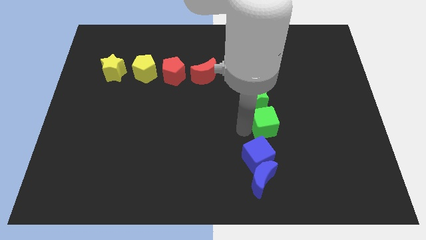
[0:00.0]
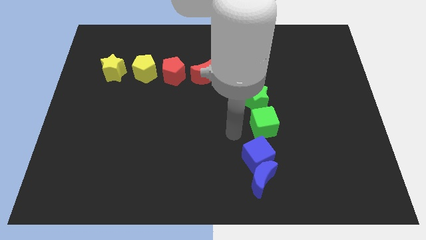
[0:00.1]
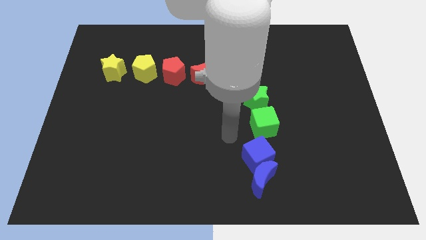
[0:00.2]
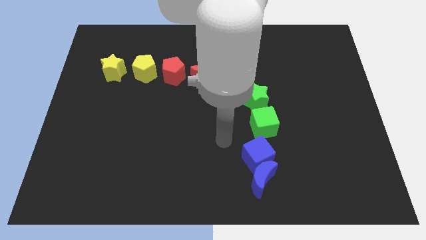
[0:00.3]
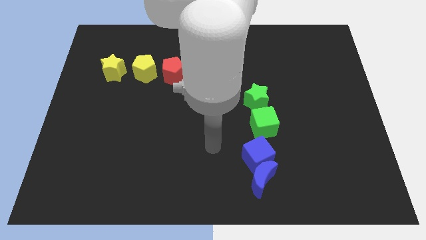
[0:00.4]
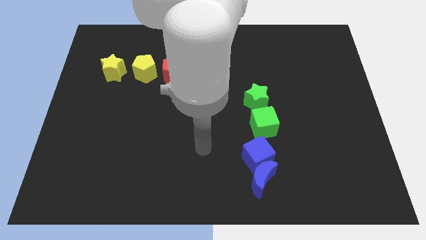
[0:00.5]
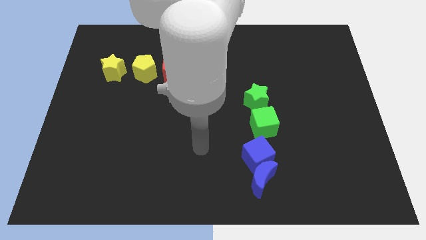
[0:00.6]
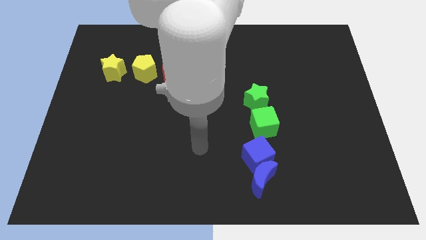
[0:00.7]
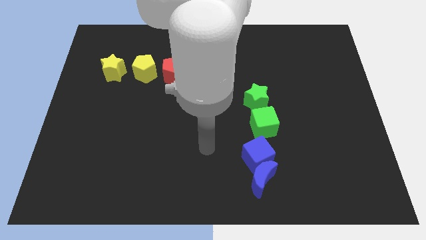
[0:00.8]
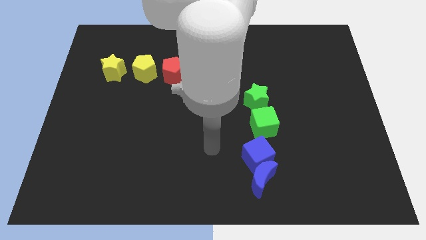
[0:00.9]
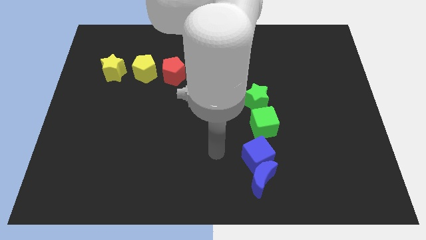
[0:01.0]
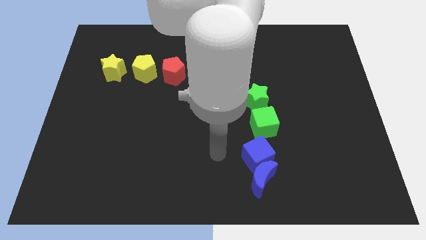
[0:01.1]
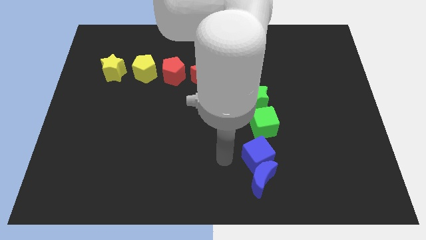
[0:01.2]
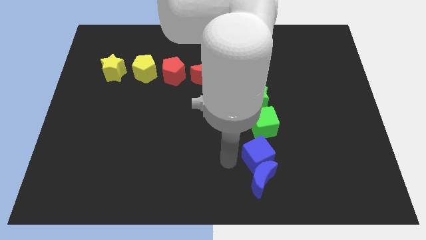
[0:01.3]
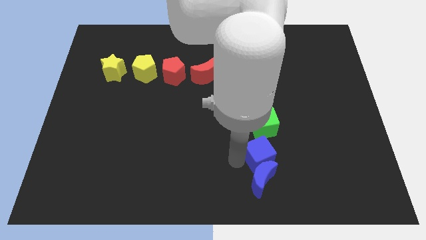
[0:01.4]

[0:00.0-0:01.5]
move your arm away from the green cube

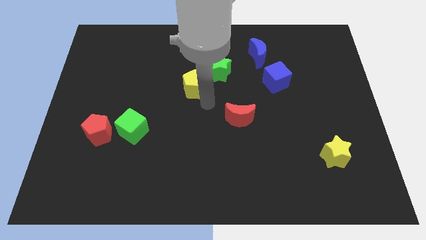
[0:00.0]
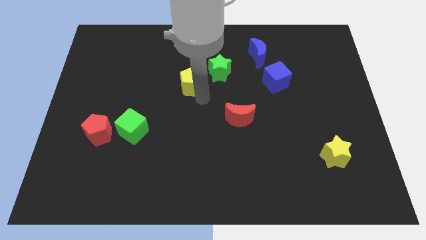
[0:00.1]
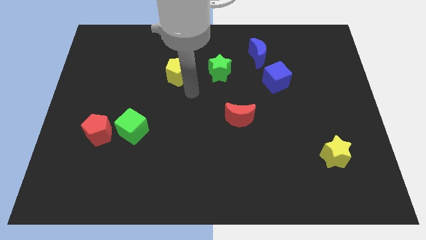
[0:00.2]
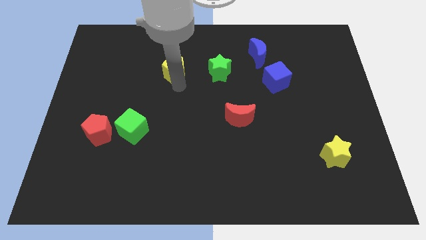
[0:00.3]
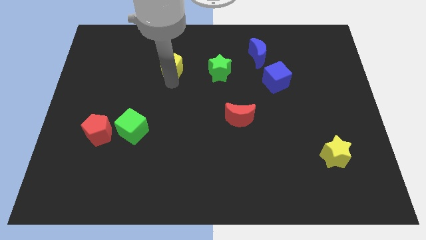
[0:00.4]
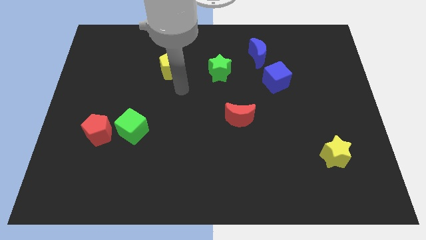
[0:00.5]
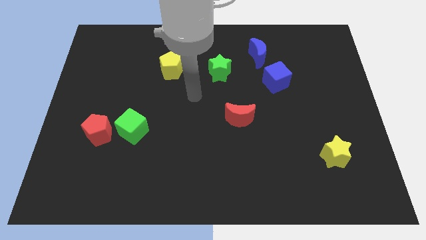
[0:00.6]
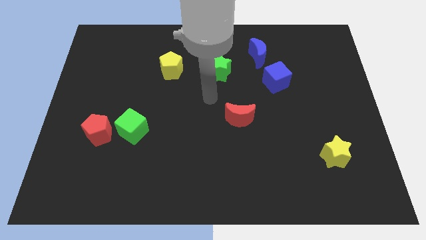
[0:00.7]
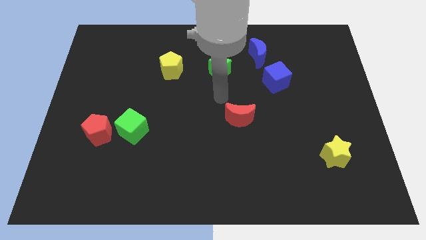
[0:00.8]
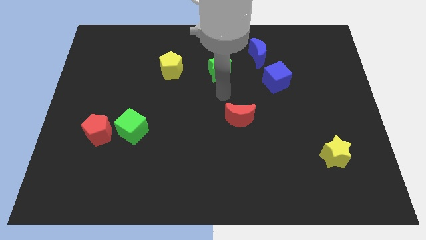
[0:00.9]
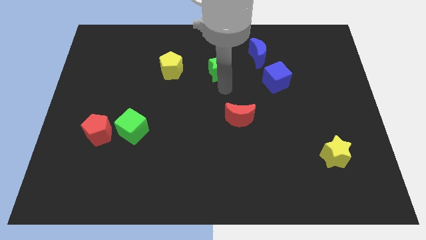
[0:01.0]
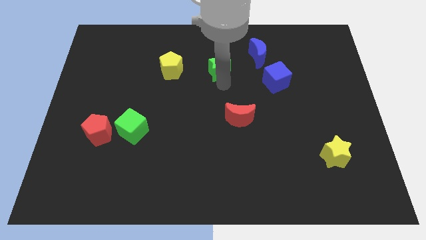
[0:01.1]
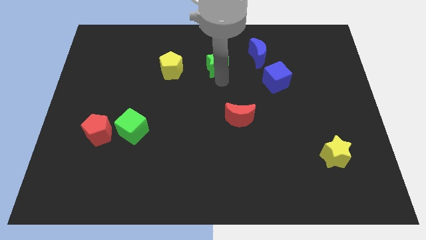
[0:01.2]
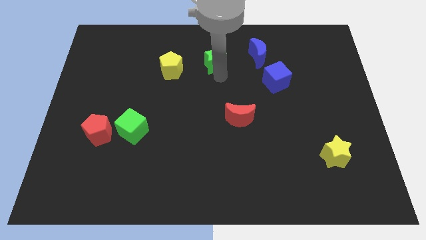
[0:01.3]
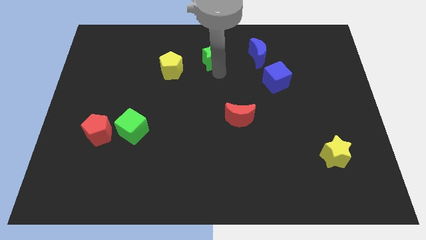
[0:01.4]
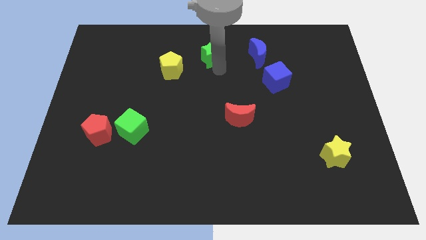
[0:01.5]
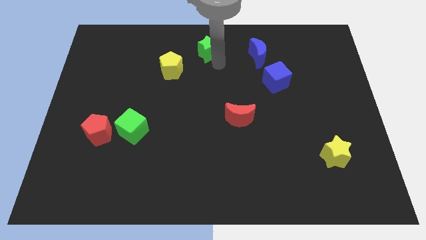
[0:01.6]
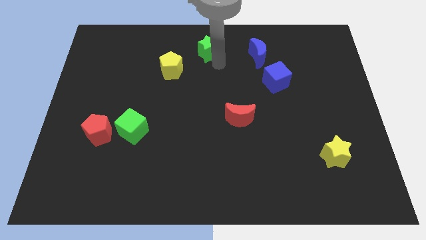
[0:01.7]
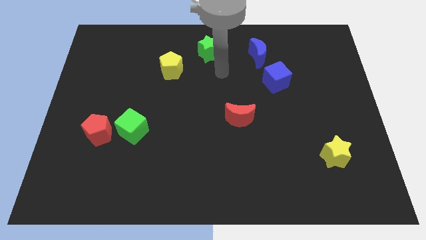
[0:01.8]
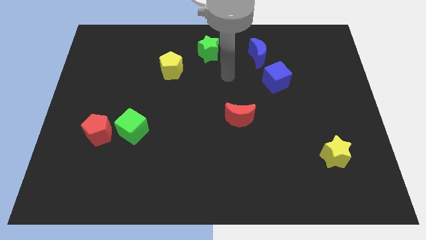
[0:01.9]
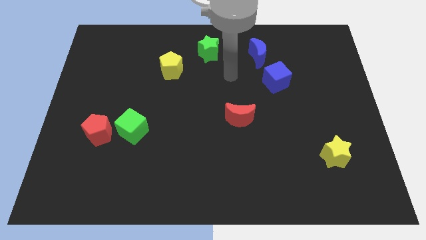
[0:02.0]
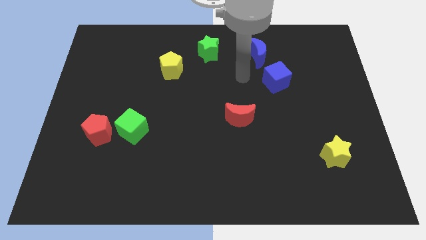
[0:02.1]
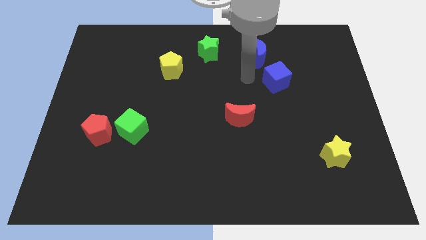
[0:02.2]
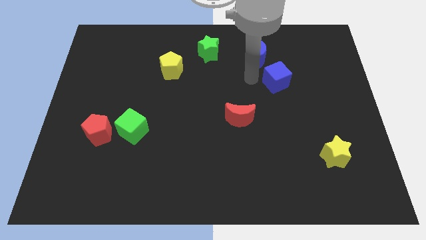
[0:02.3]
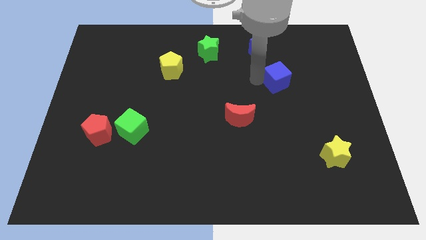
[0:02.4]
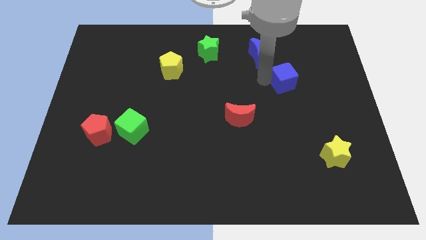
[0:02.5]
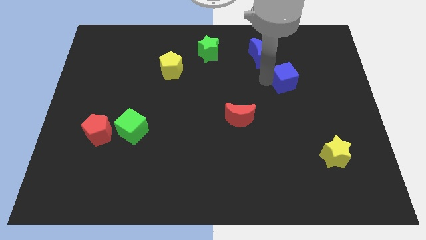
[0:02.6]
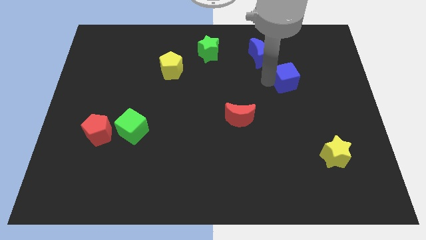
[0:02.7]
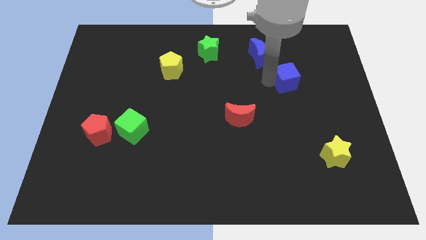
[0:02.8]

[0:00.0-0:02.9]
push the green star upwards

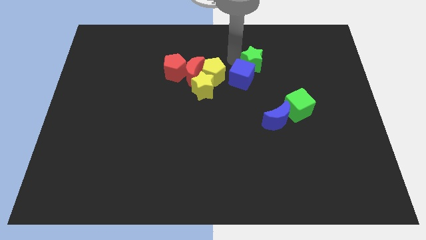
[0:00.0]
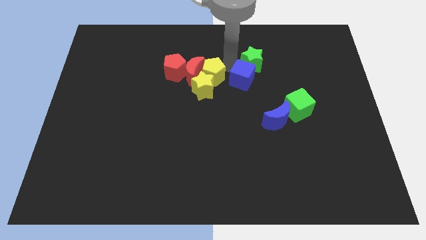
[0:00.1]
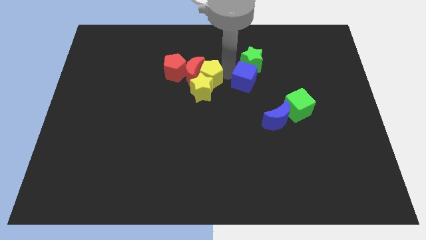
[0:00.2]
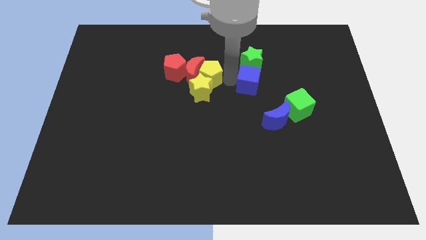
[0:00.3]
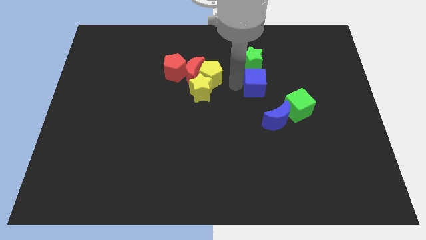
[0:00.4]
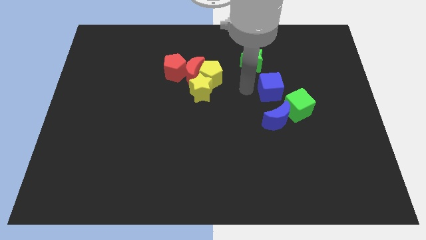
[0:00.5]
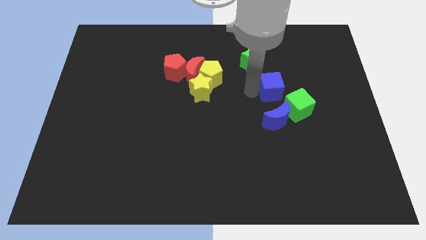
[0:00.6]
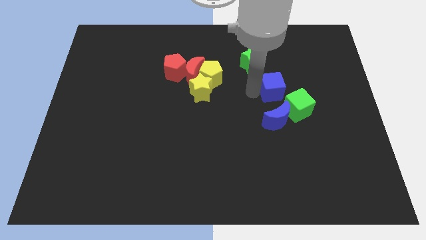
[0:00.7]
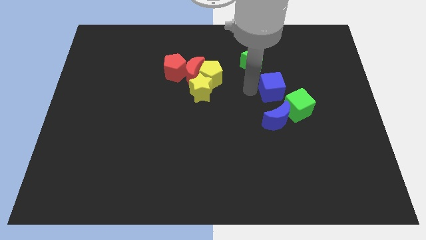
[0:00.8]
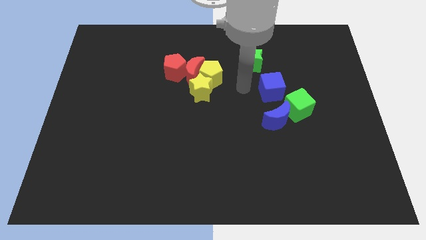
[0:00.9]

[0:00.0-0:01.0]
push the blue cube near to the green cube

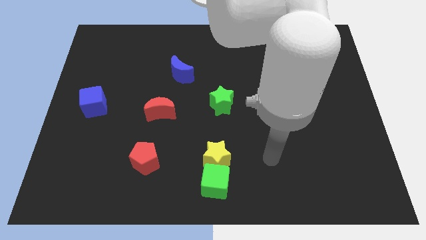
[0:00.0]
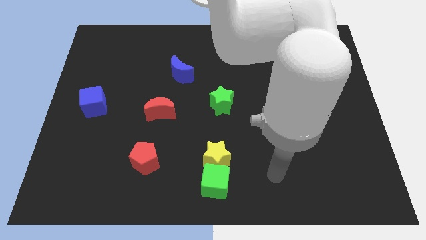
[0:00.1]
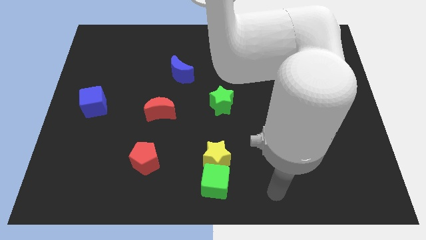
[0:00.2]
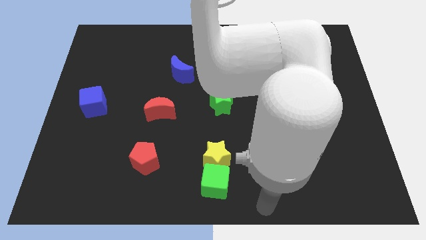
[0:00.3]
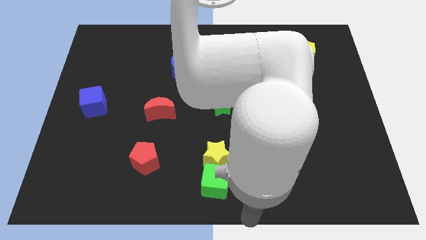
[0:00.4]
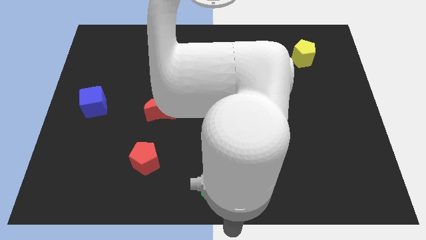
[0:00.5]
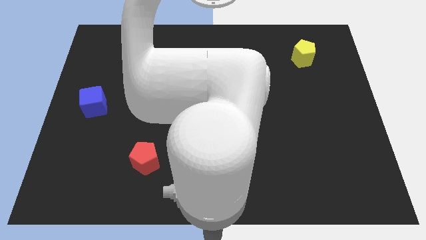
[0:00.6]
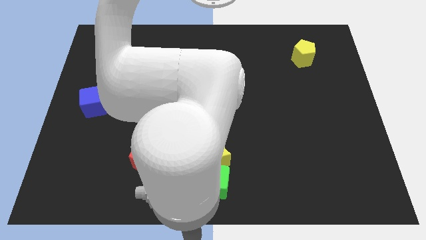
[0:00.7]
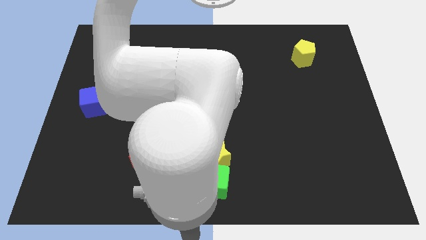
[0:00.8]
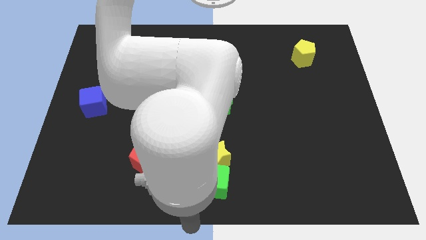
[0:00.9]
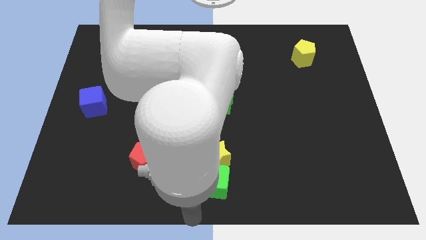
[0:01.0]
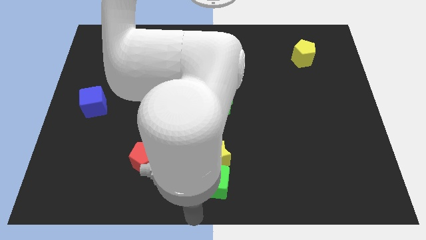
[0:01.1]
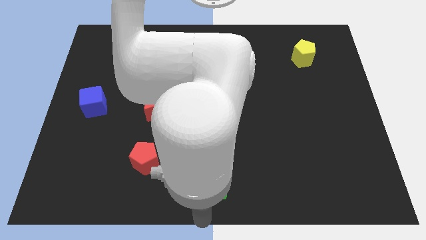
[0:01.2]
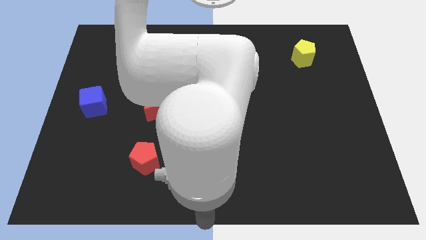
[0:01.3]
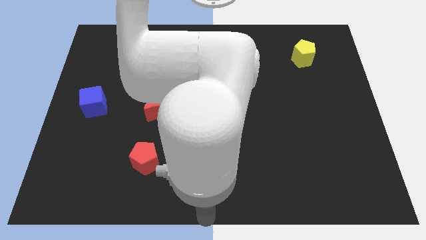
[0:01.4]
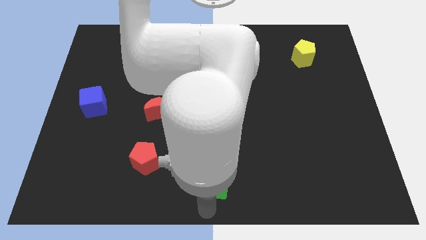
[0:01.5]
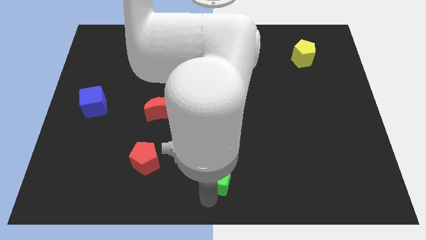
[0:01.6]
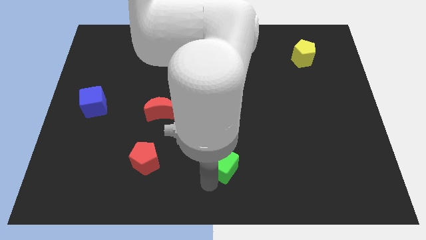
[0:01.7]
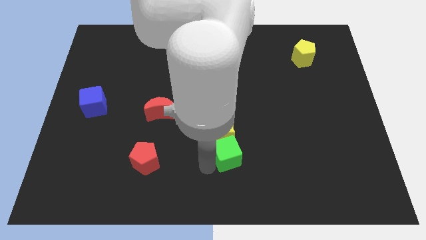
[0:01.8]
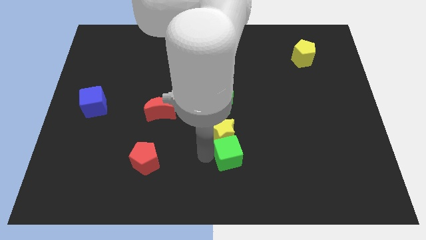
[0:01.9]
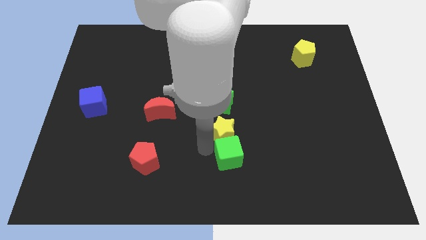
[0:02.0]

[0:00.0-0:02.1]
move green cube close to the yellow star

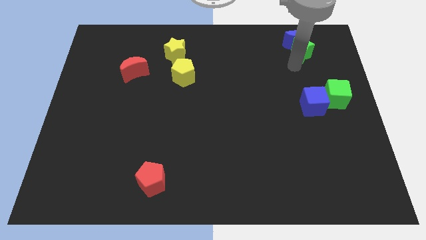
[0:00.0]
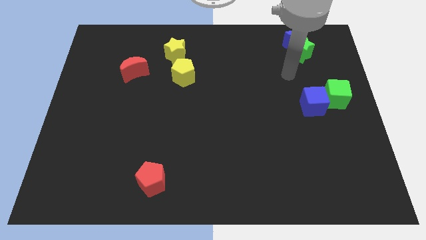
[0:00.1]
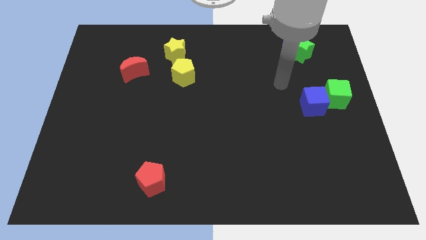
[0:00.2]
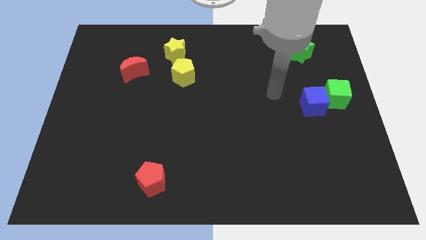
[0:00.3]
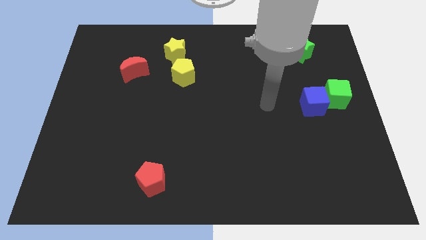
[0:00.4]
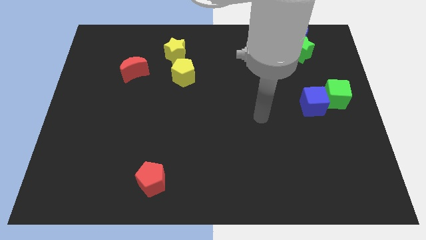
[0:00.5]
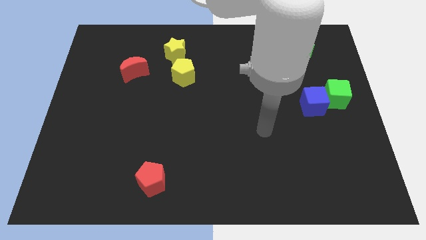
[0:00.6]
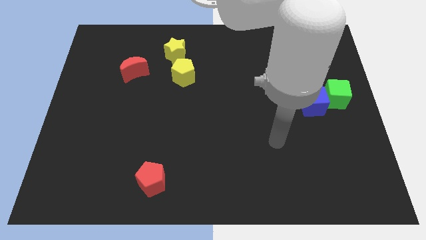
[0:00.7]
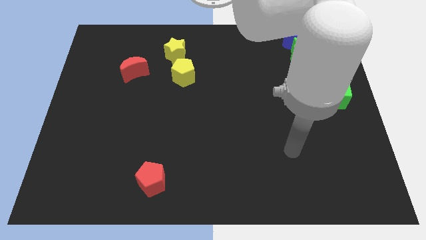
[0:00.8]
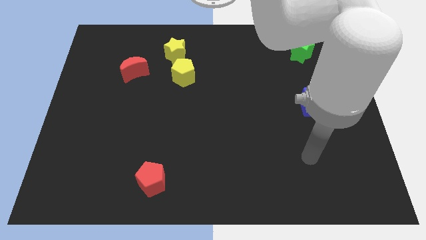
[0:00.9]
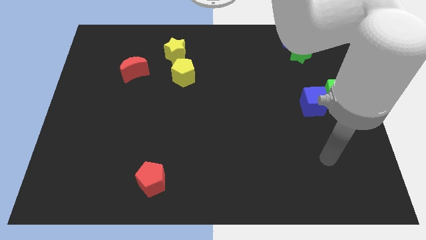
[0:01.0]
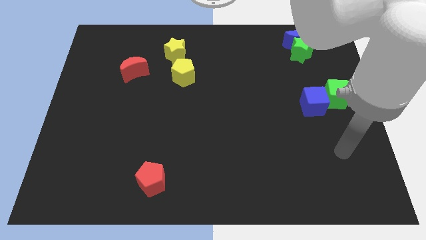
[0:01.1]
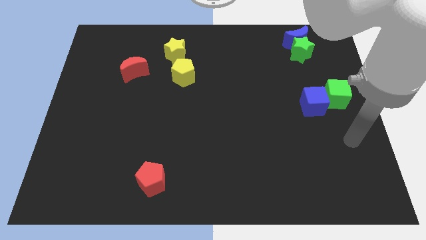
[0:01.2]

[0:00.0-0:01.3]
move your arm away from the green star

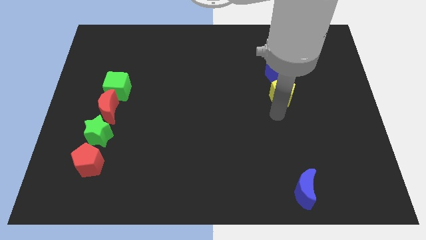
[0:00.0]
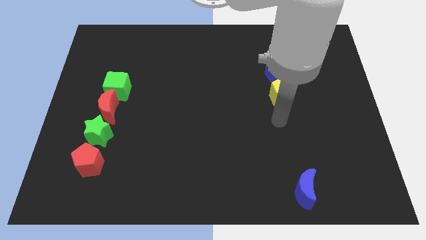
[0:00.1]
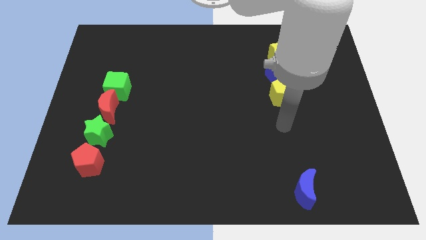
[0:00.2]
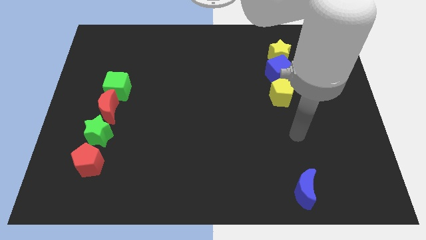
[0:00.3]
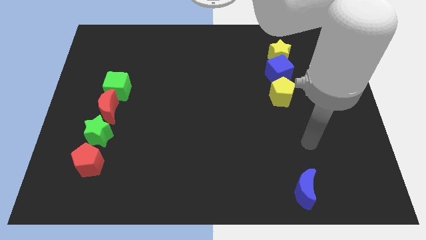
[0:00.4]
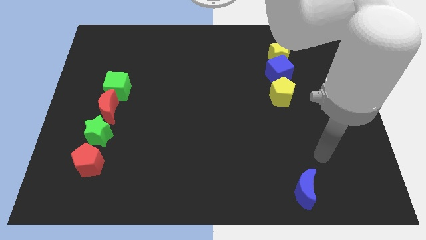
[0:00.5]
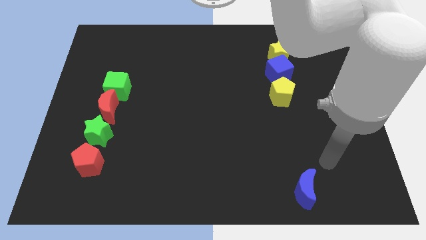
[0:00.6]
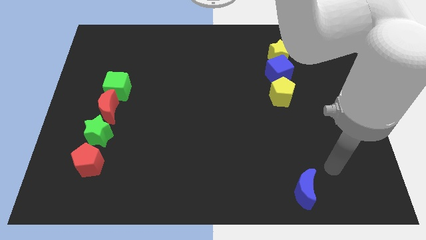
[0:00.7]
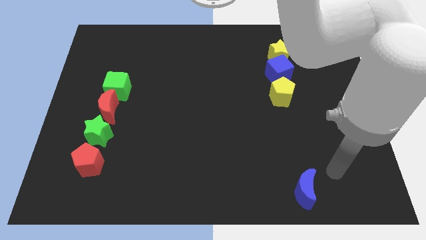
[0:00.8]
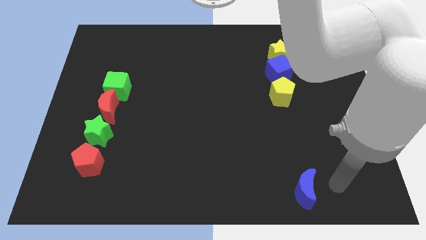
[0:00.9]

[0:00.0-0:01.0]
move your arm right to the blue crescent
